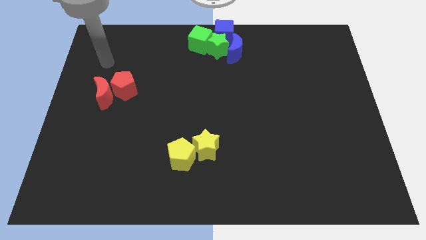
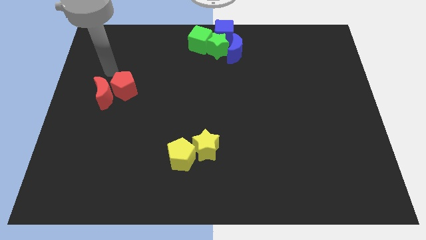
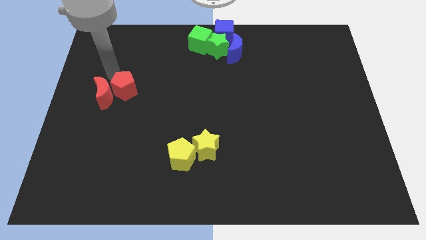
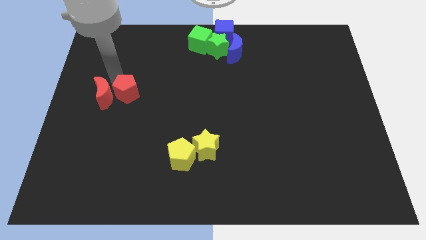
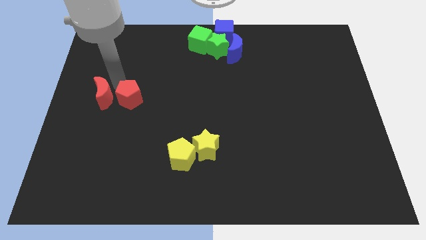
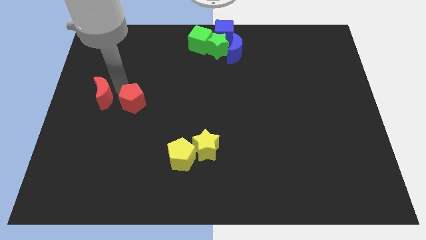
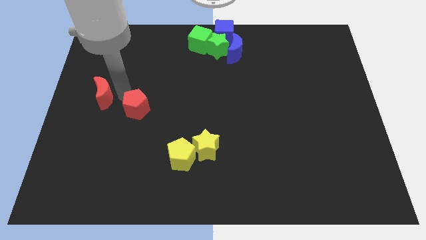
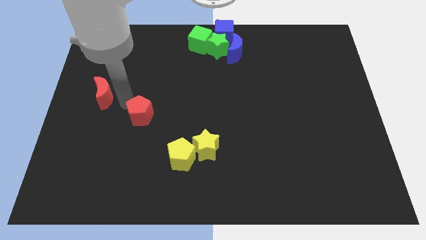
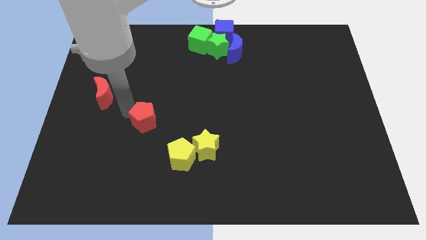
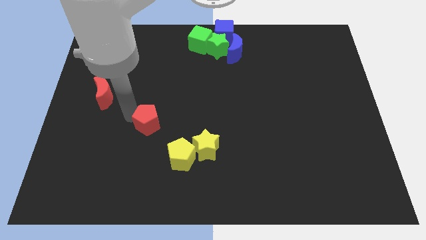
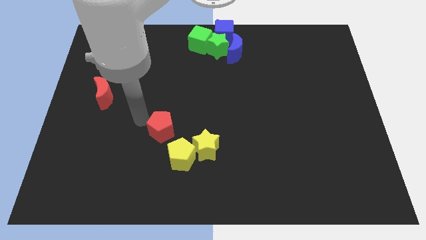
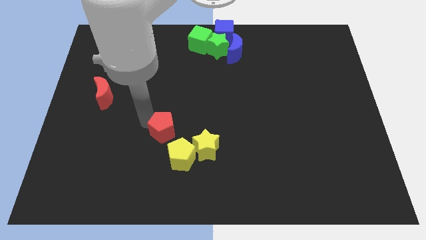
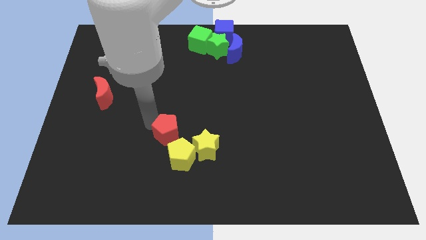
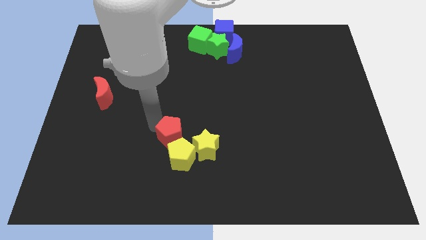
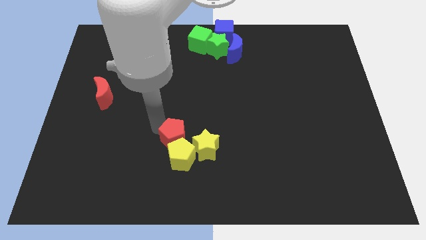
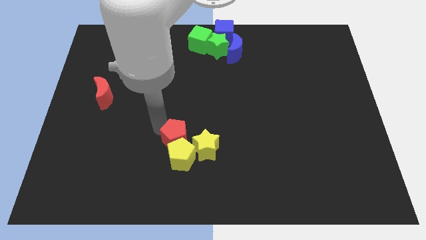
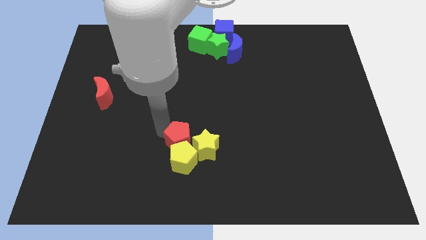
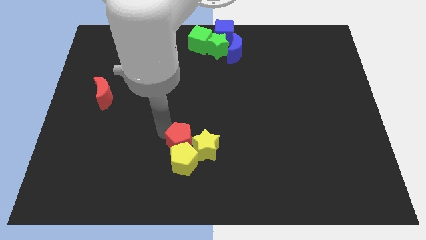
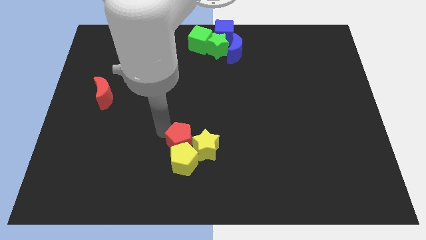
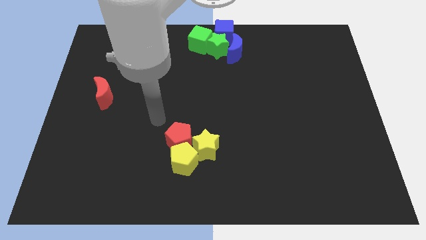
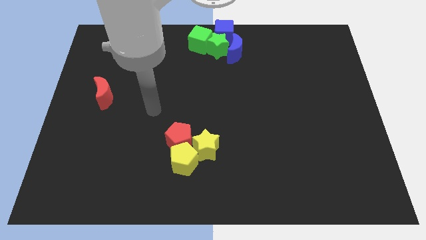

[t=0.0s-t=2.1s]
put the red pentagon at the top left side of the yellow pentagon

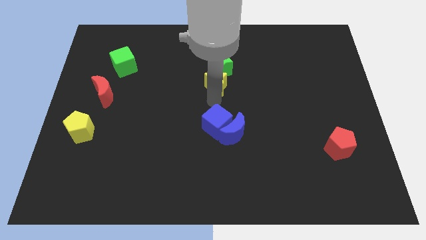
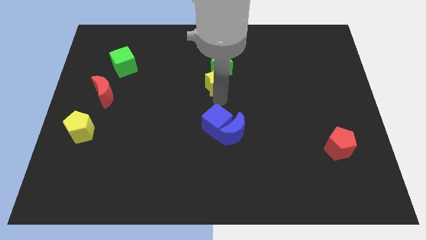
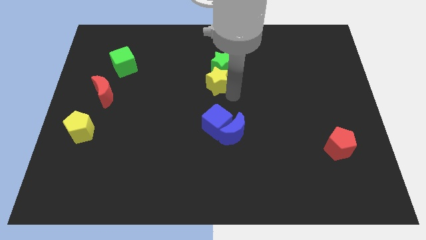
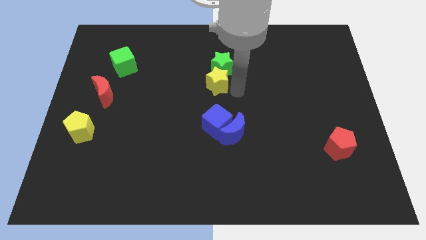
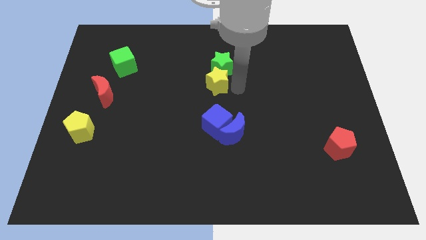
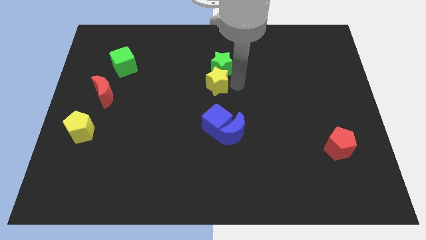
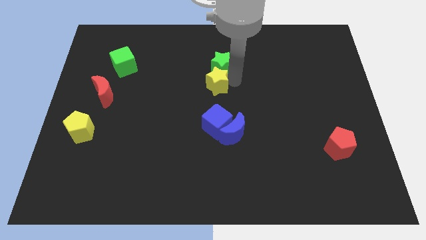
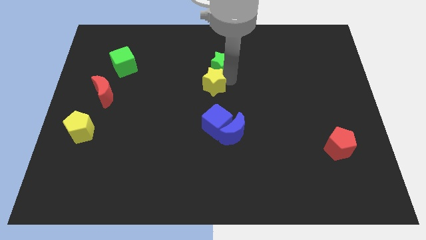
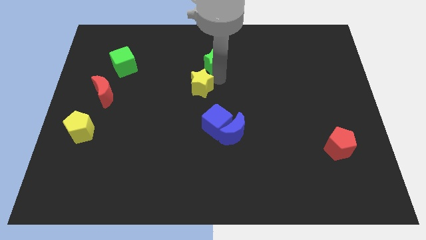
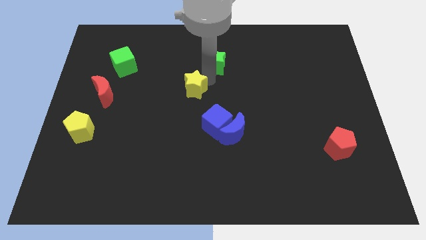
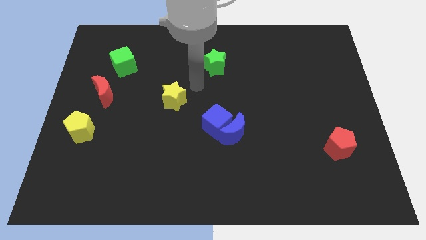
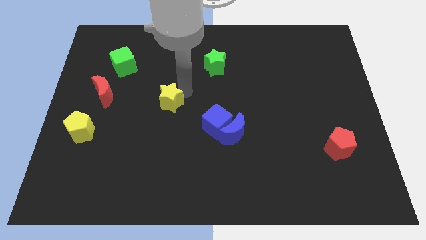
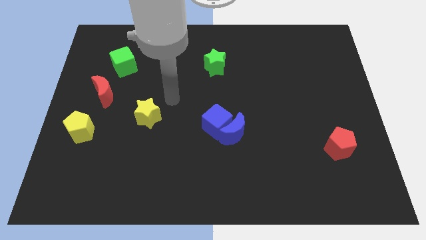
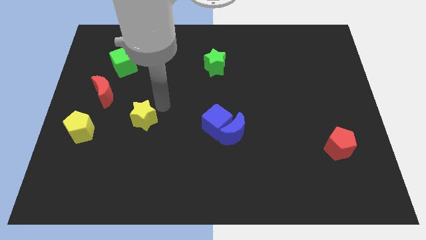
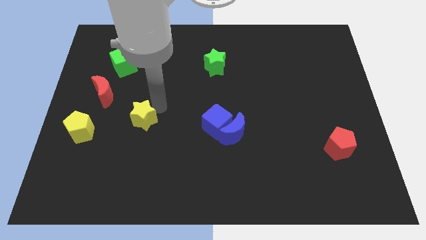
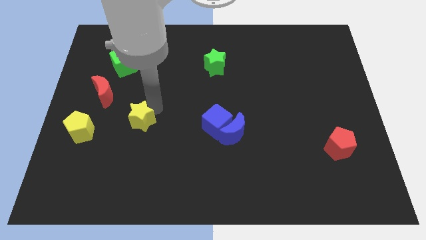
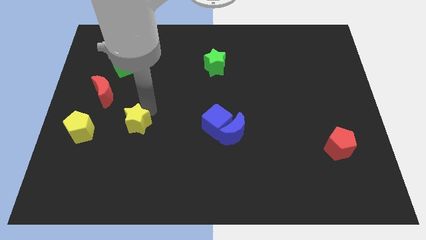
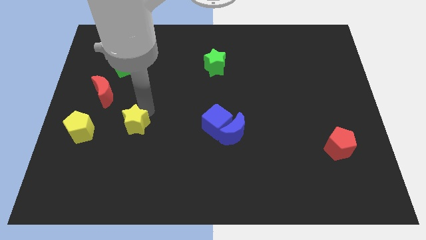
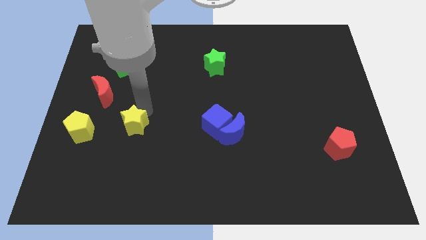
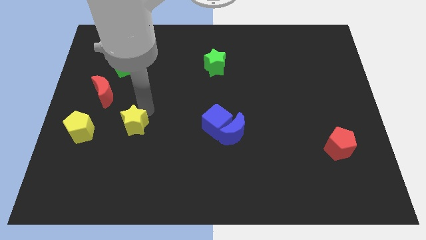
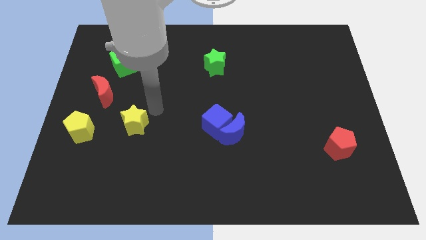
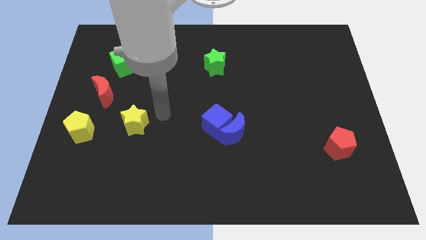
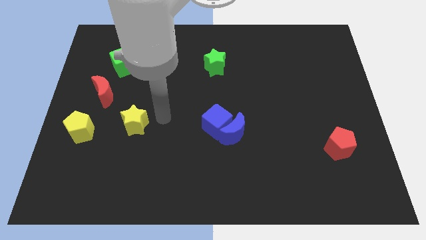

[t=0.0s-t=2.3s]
push the yellow star to the parallel left of the blue cube

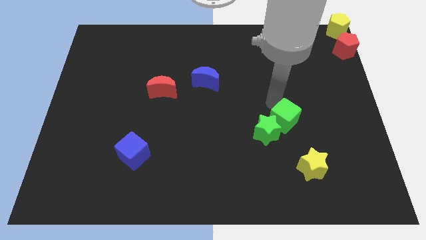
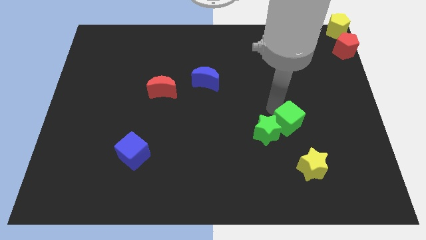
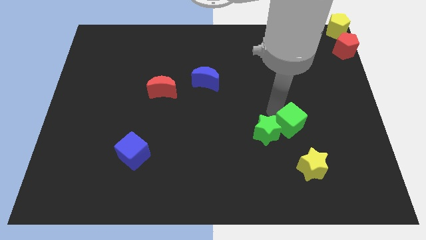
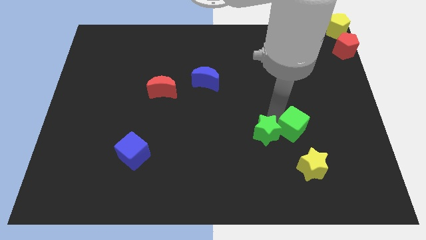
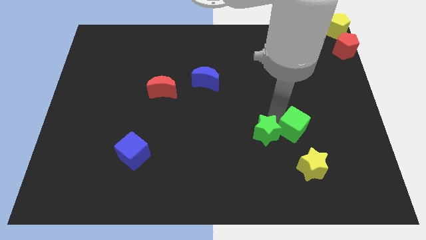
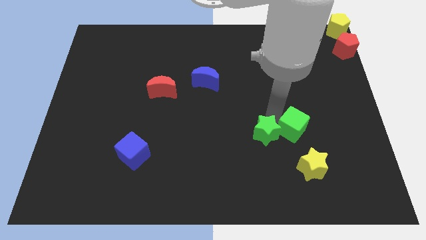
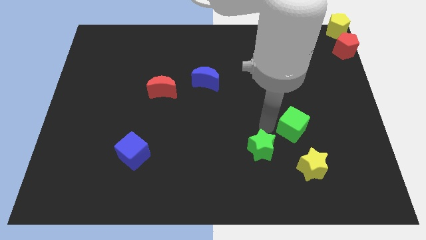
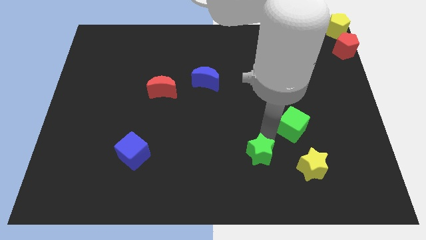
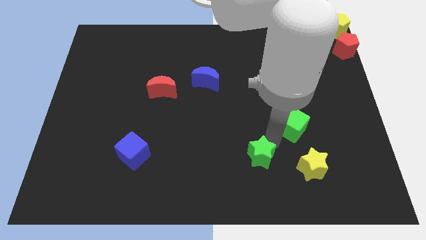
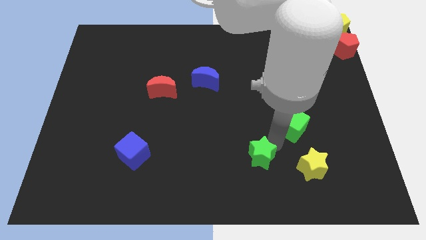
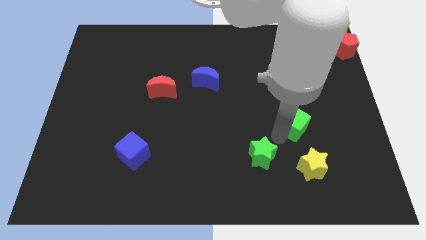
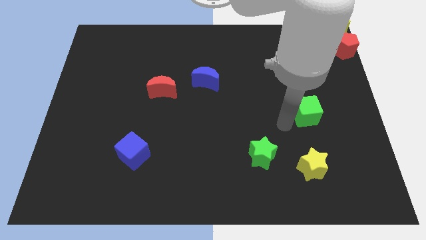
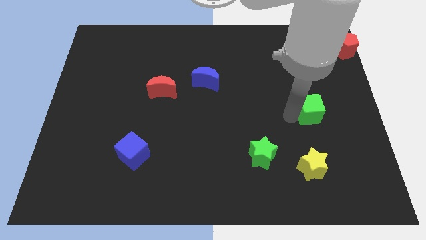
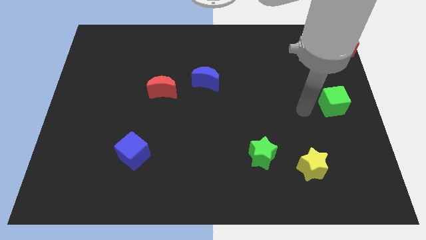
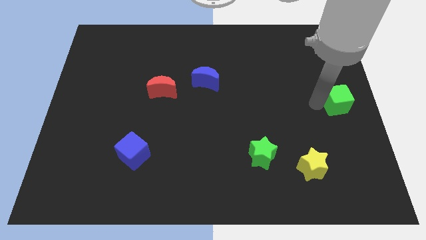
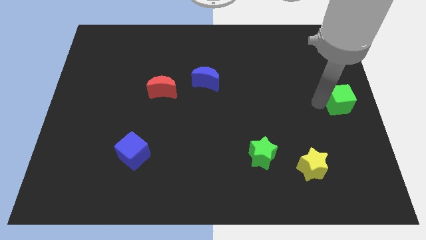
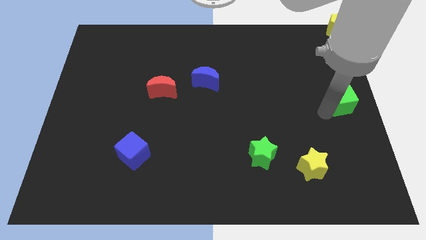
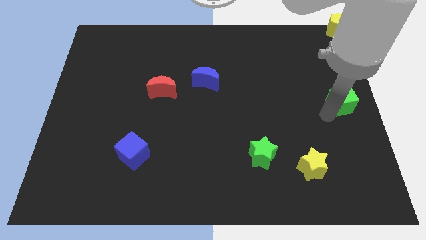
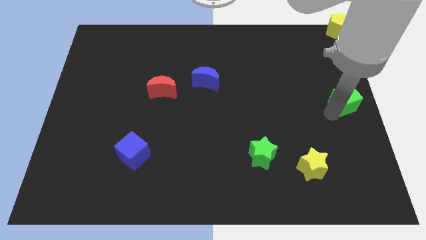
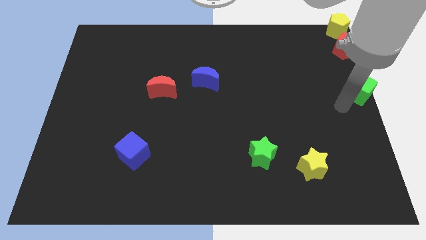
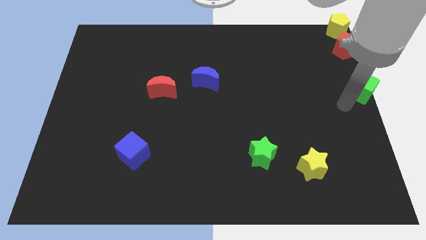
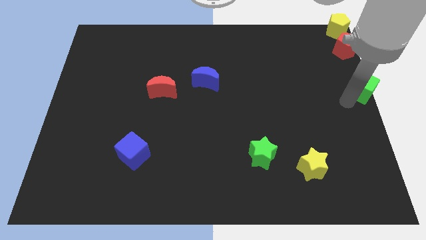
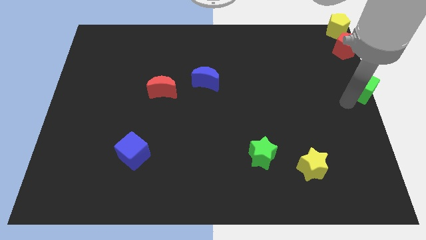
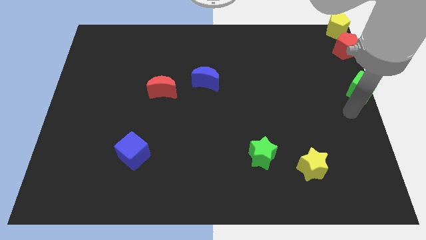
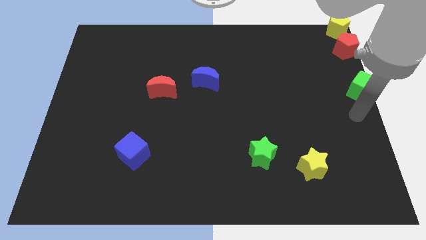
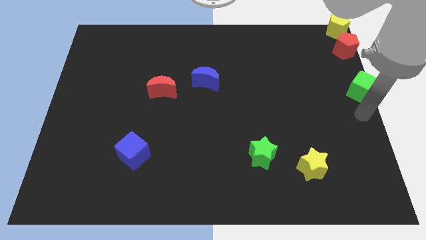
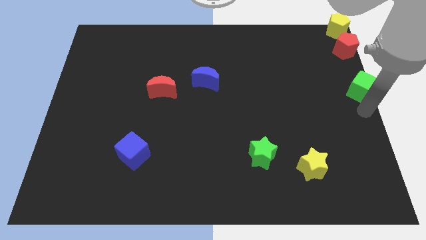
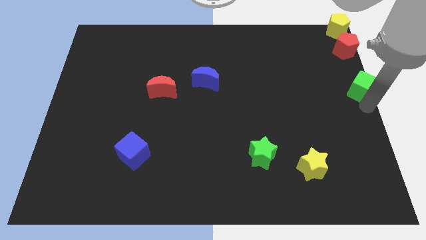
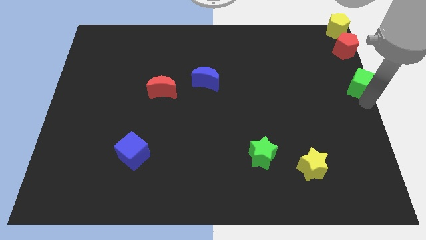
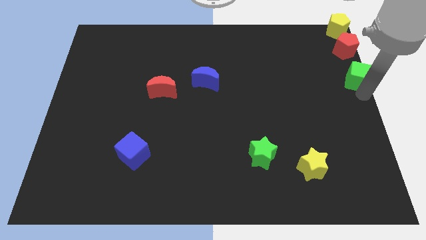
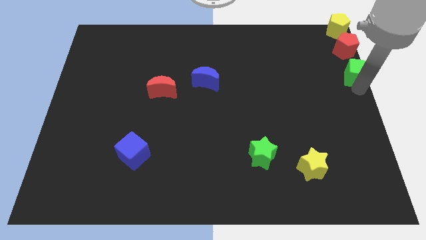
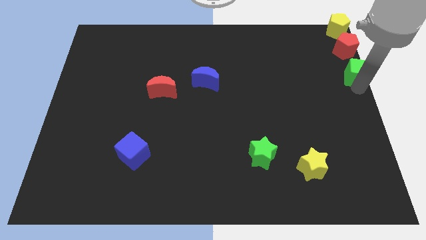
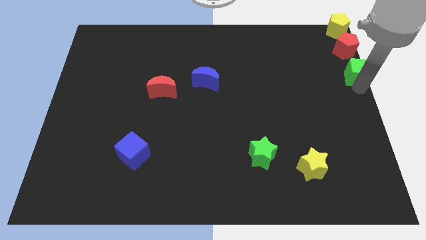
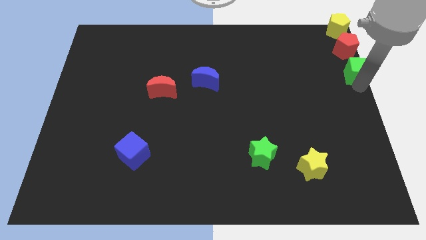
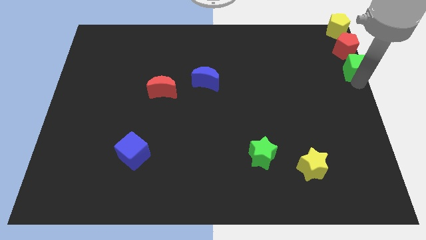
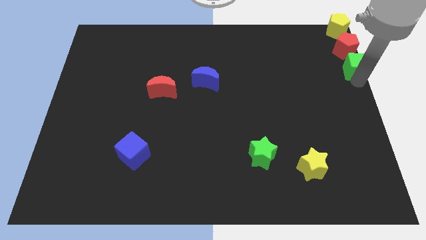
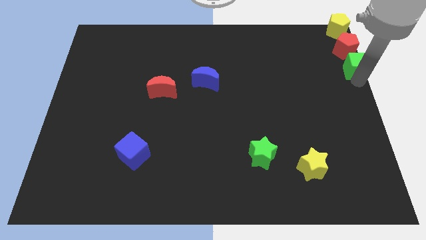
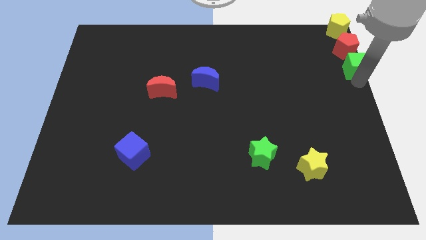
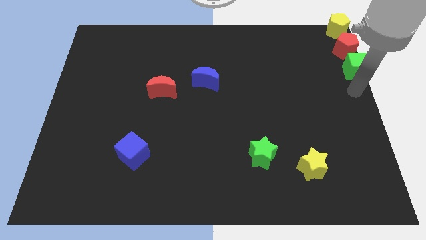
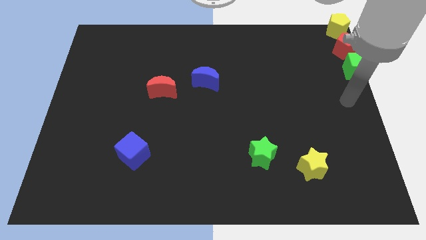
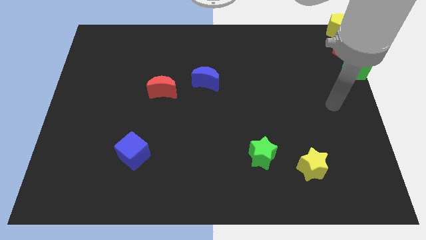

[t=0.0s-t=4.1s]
push the green cube to the bottom of the red pentagon

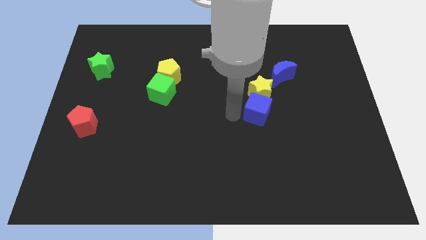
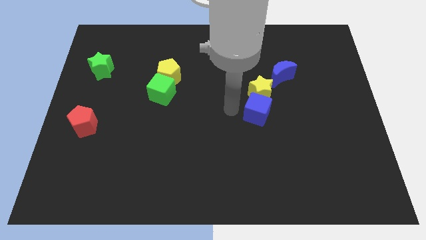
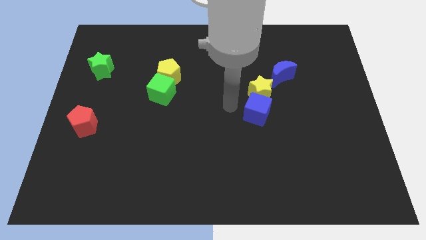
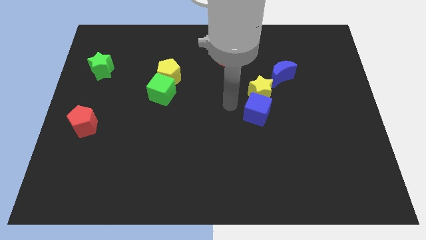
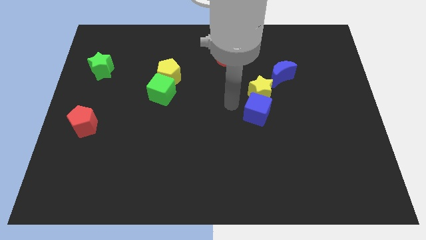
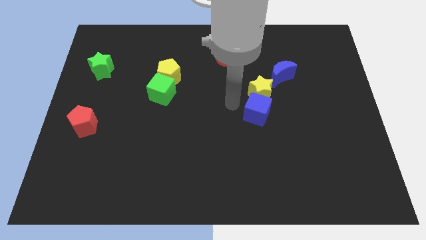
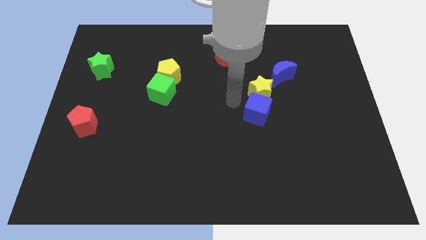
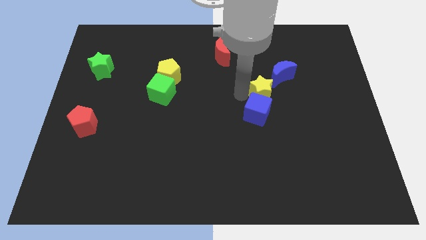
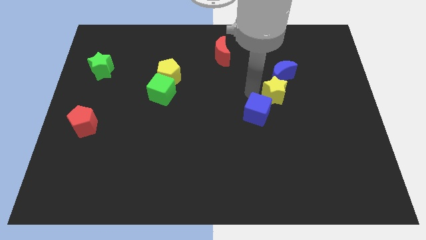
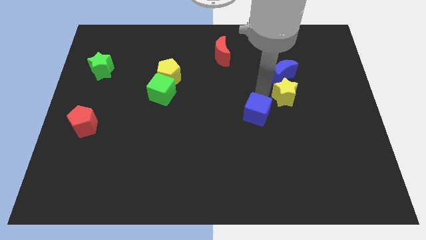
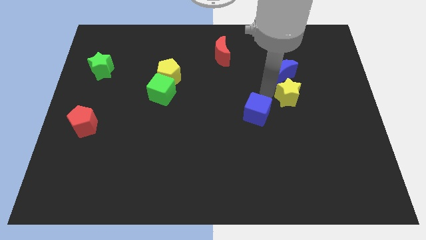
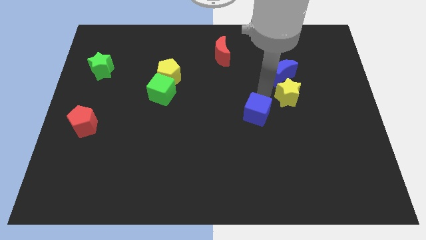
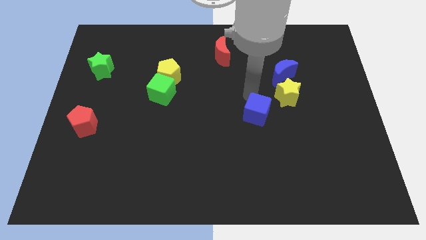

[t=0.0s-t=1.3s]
put the yellow star below the blue moon
